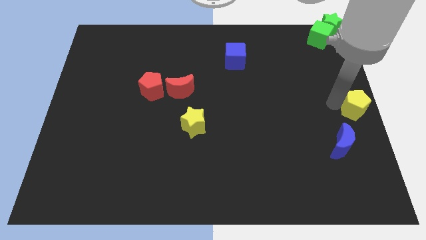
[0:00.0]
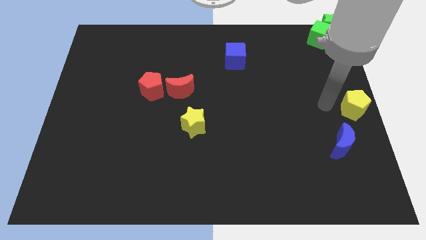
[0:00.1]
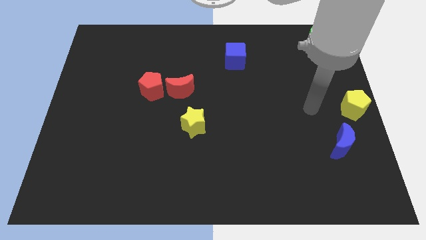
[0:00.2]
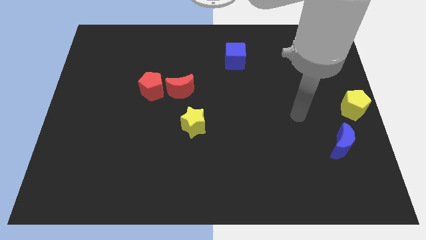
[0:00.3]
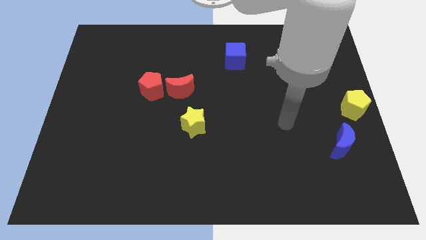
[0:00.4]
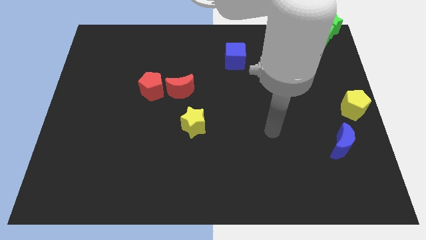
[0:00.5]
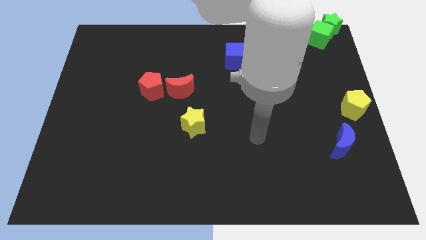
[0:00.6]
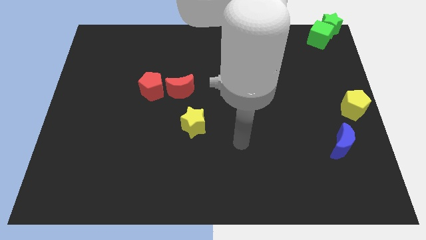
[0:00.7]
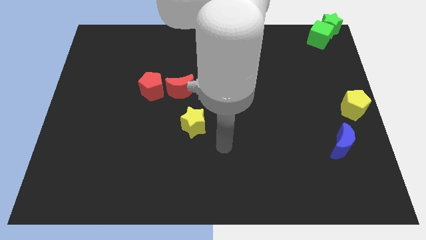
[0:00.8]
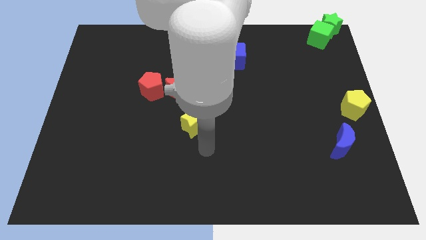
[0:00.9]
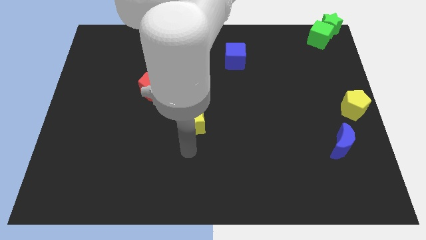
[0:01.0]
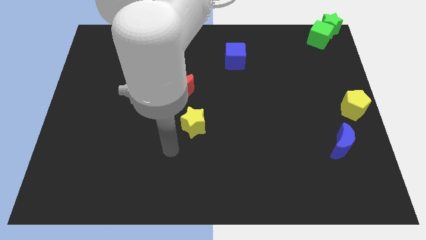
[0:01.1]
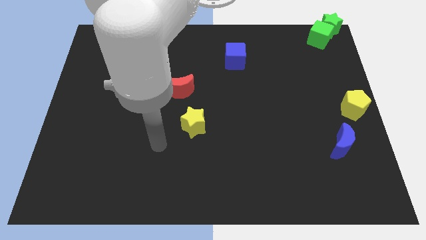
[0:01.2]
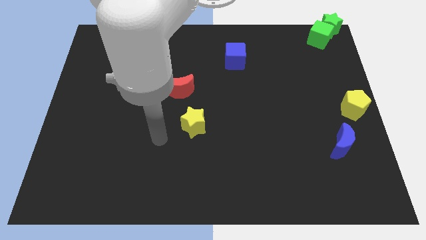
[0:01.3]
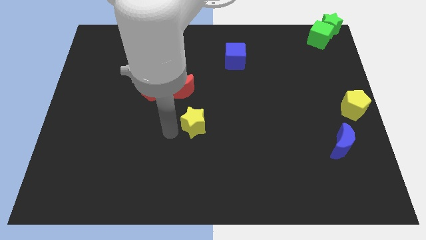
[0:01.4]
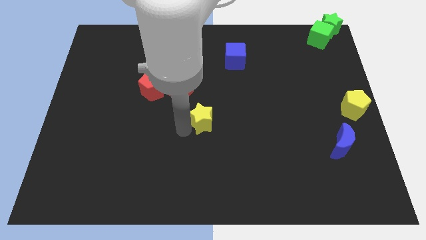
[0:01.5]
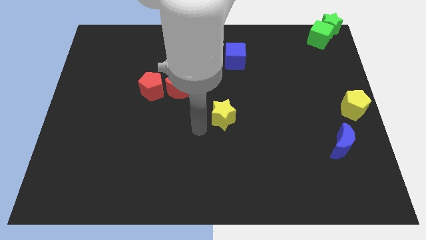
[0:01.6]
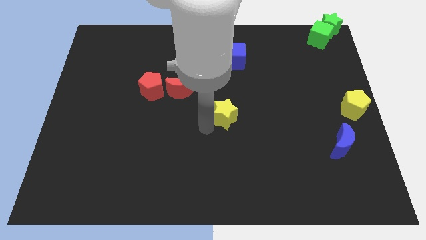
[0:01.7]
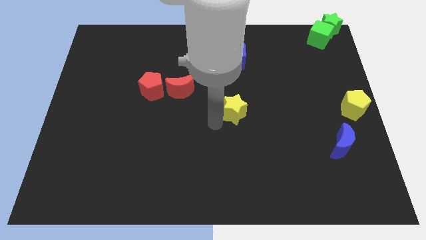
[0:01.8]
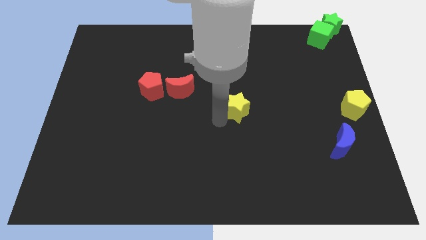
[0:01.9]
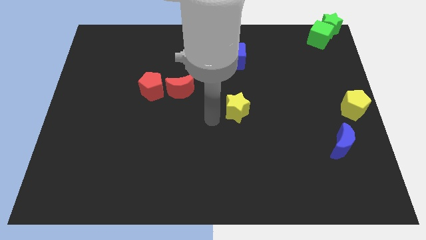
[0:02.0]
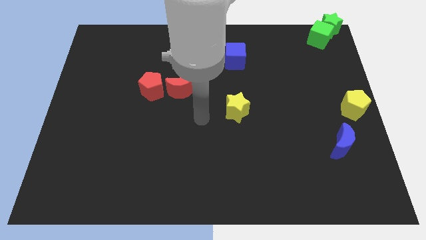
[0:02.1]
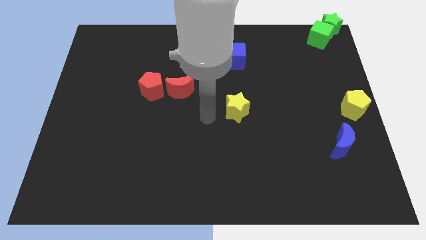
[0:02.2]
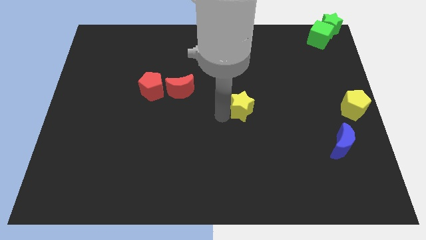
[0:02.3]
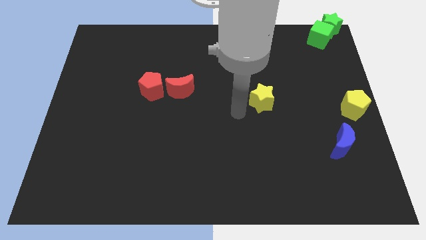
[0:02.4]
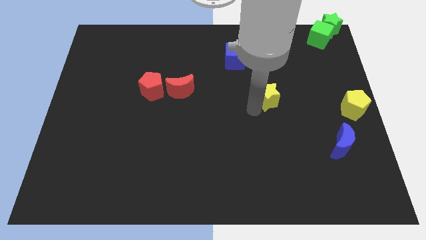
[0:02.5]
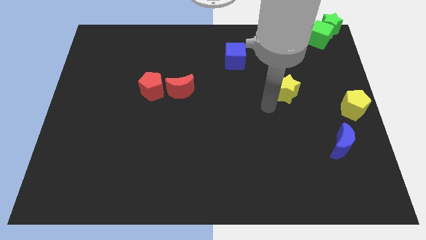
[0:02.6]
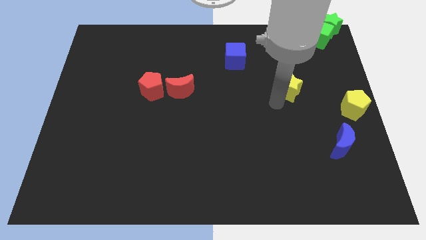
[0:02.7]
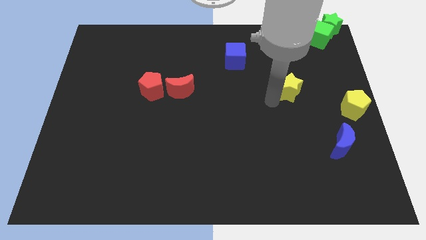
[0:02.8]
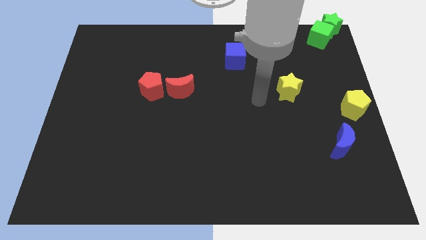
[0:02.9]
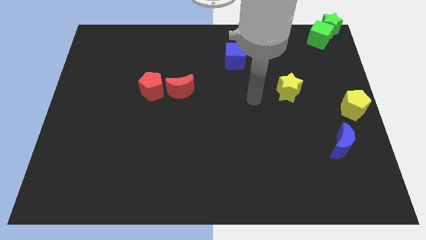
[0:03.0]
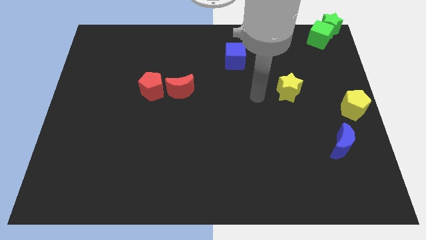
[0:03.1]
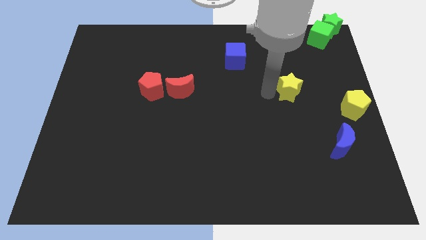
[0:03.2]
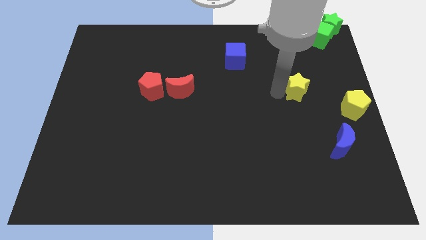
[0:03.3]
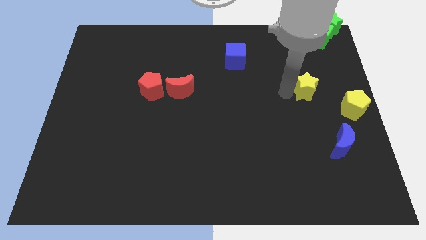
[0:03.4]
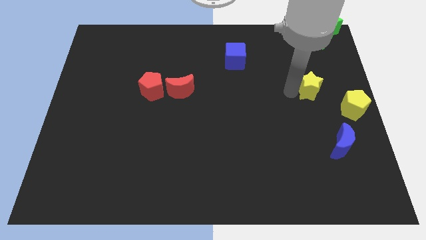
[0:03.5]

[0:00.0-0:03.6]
push the yellow star towards the center right of the board

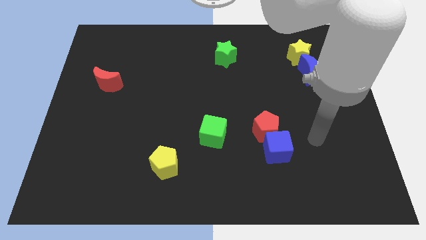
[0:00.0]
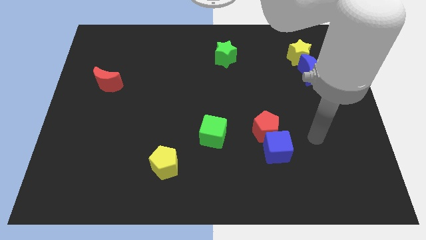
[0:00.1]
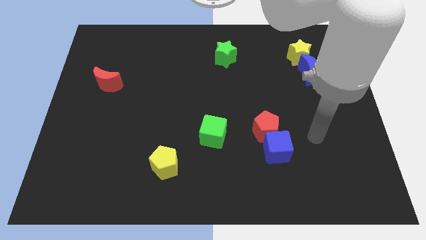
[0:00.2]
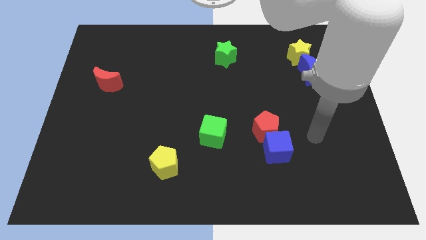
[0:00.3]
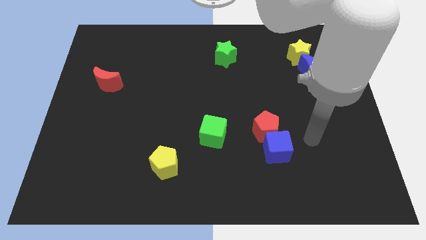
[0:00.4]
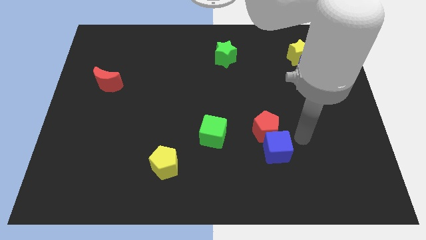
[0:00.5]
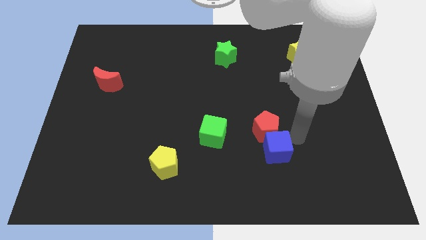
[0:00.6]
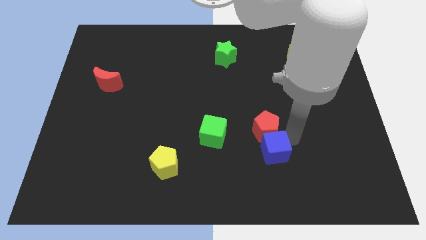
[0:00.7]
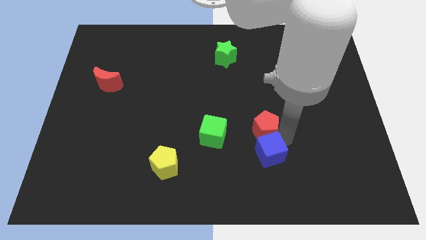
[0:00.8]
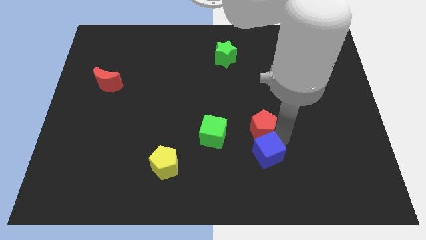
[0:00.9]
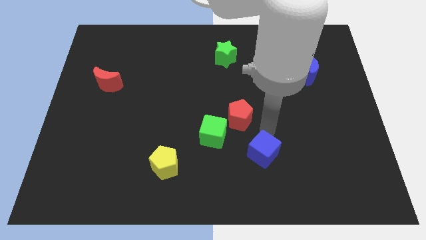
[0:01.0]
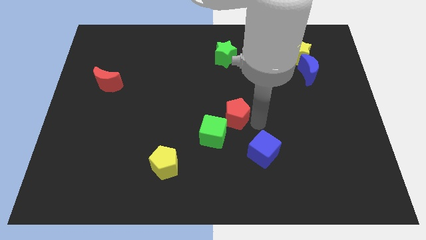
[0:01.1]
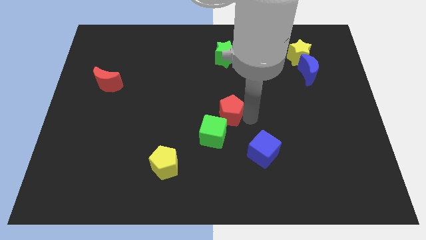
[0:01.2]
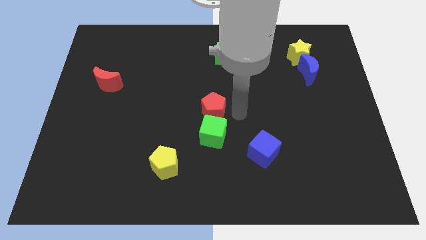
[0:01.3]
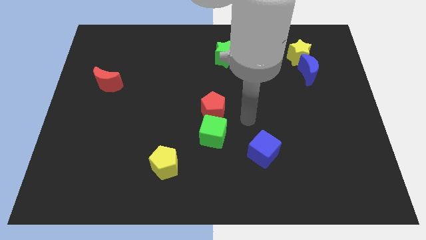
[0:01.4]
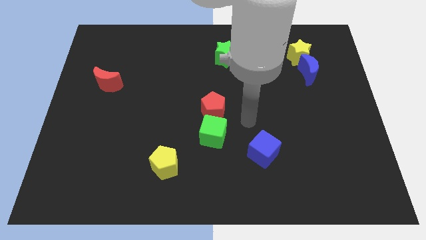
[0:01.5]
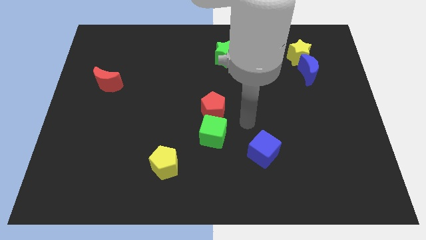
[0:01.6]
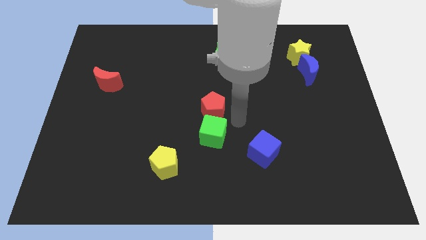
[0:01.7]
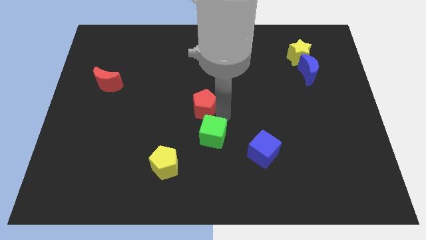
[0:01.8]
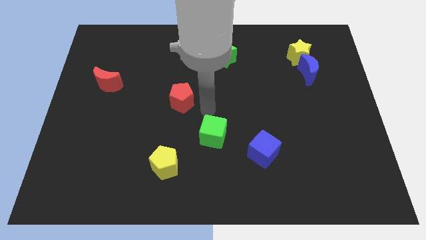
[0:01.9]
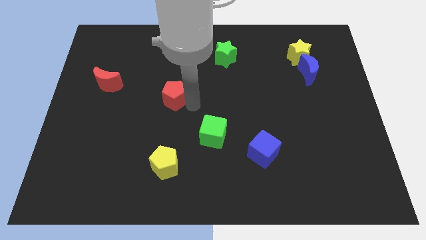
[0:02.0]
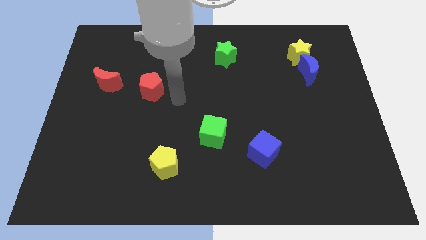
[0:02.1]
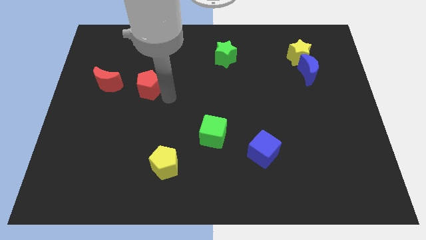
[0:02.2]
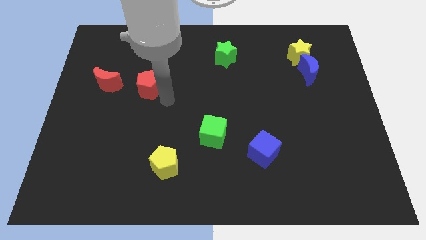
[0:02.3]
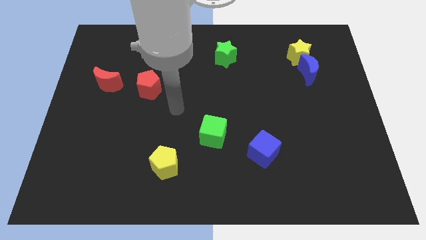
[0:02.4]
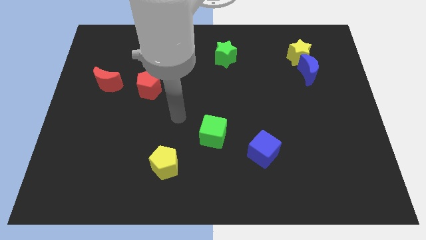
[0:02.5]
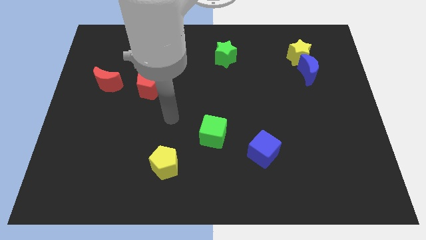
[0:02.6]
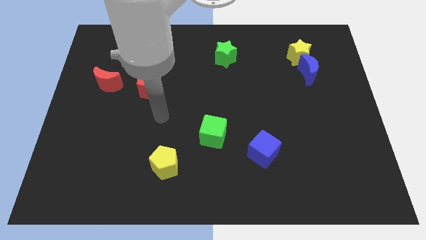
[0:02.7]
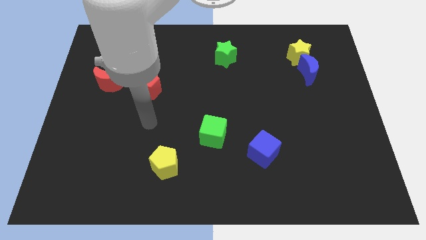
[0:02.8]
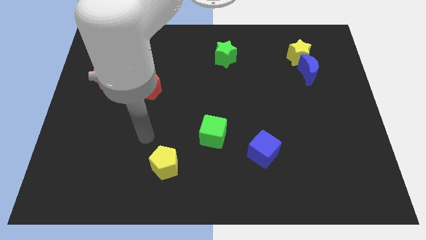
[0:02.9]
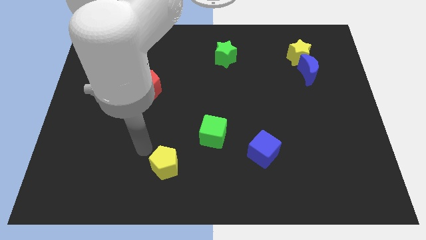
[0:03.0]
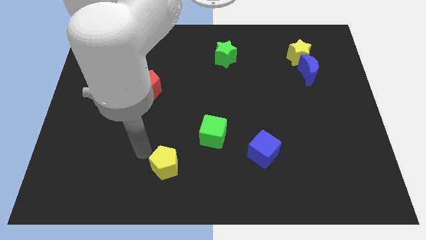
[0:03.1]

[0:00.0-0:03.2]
move the red pentagon right to the red crescent

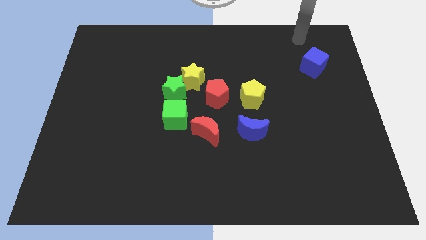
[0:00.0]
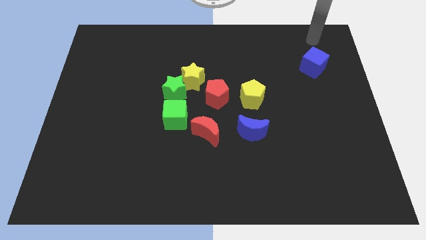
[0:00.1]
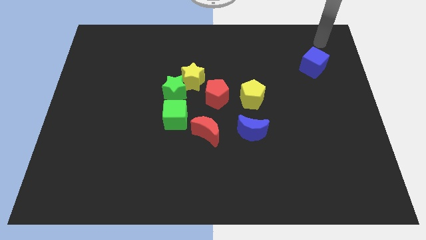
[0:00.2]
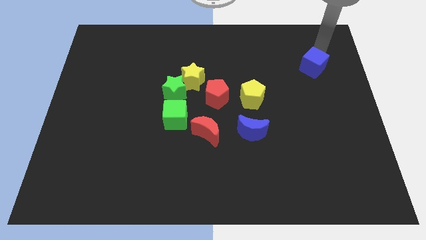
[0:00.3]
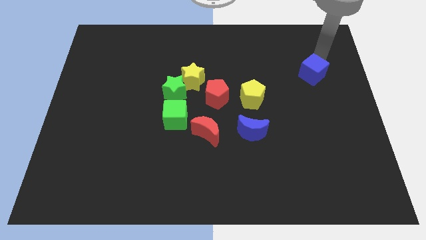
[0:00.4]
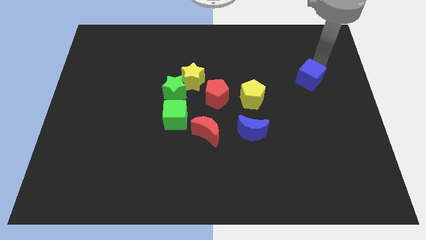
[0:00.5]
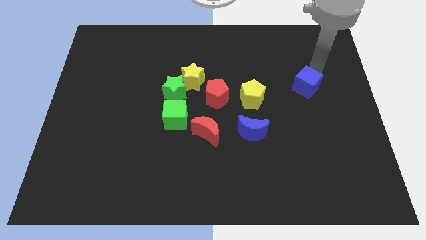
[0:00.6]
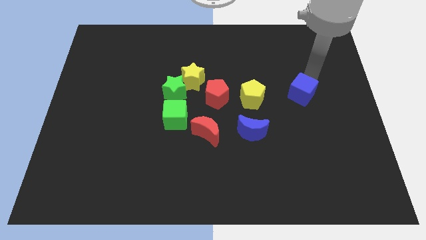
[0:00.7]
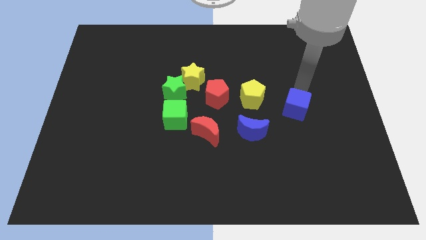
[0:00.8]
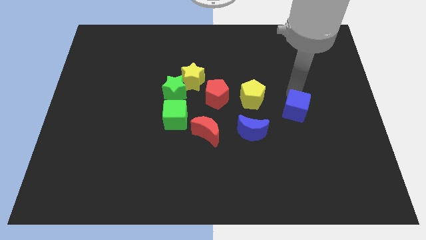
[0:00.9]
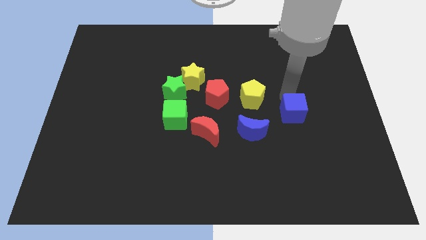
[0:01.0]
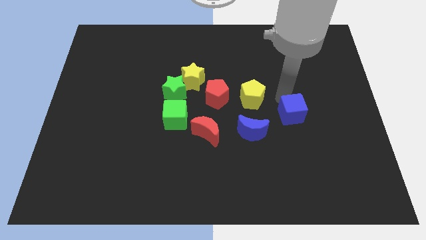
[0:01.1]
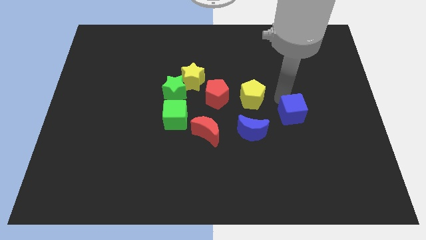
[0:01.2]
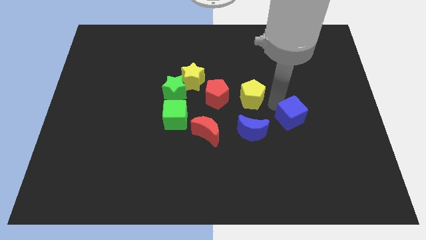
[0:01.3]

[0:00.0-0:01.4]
push the blue cube to the bottom

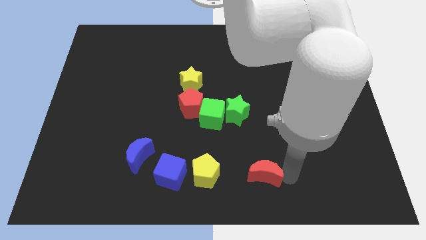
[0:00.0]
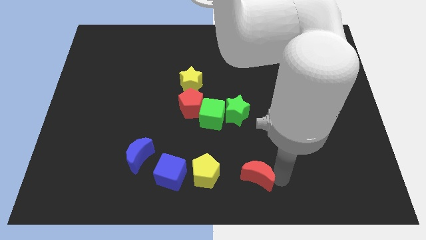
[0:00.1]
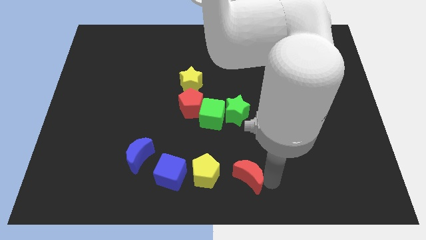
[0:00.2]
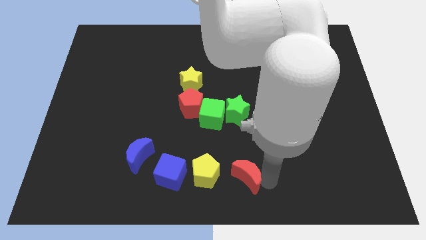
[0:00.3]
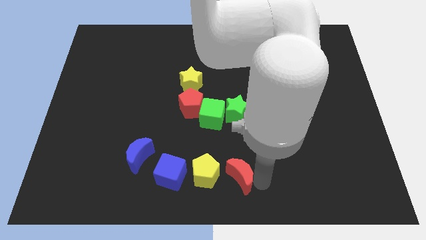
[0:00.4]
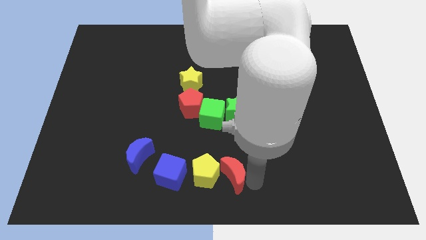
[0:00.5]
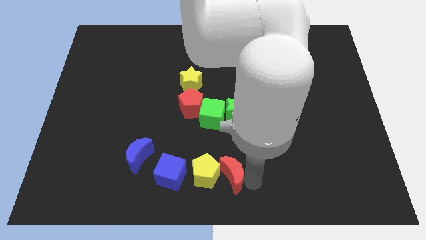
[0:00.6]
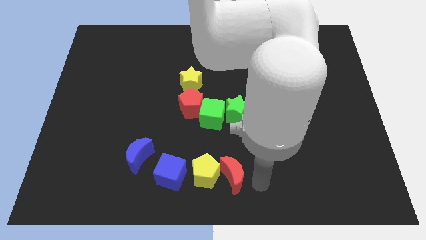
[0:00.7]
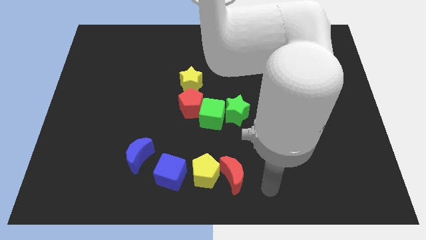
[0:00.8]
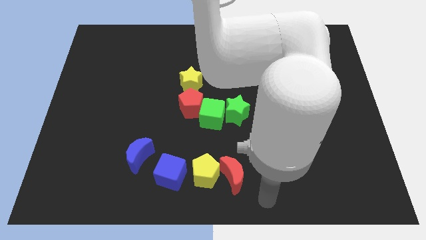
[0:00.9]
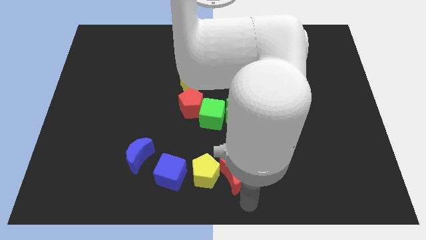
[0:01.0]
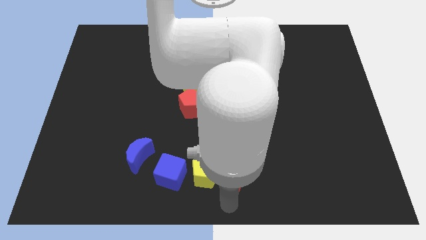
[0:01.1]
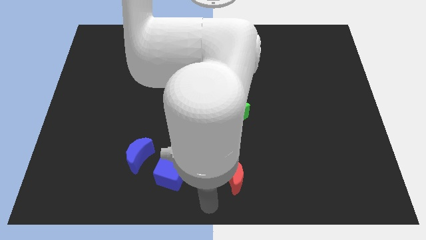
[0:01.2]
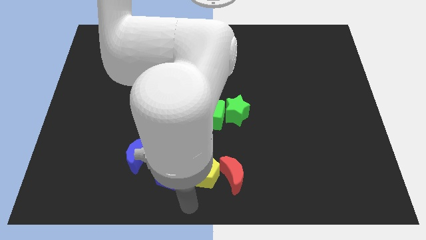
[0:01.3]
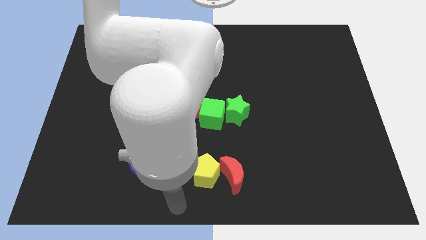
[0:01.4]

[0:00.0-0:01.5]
push the red moon into the yellow pentagon
